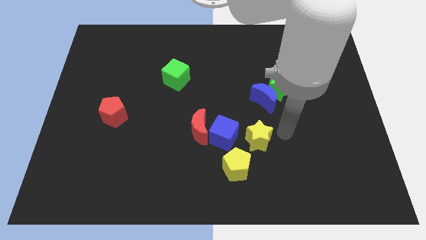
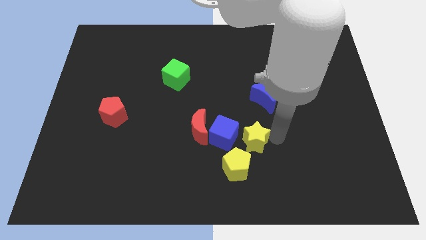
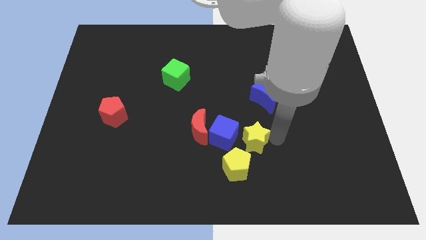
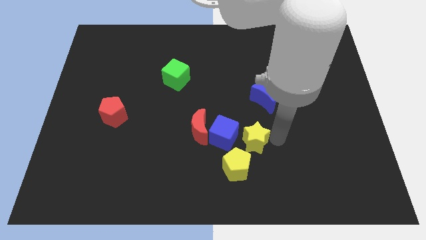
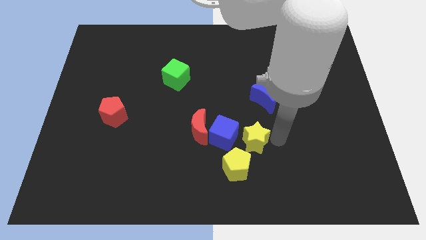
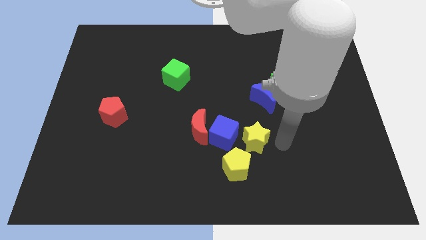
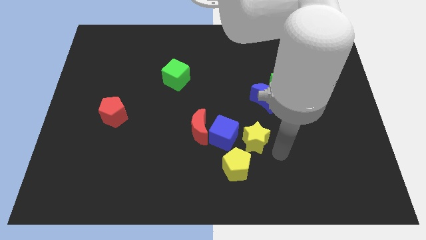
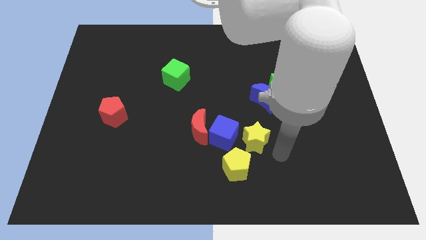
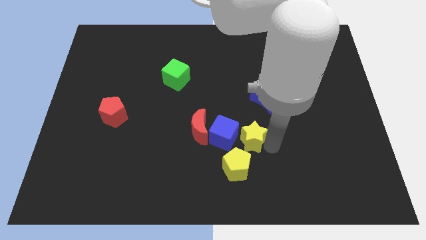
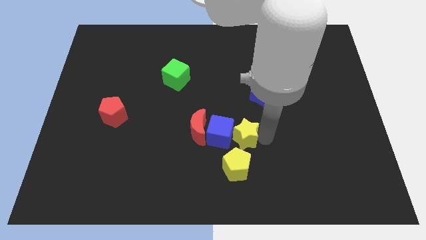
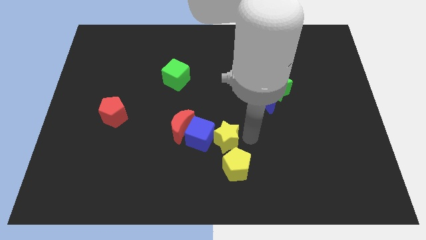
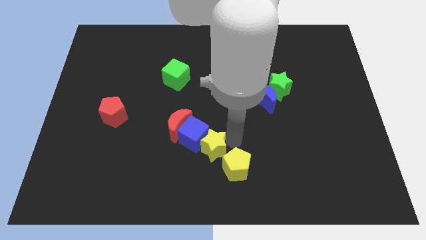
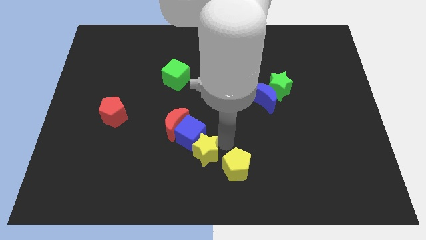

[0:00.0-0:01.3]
push yellow star into blue cube

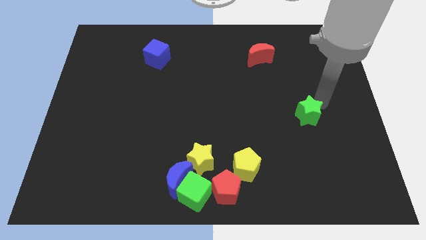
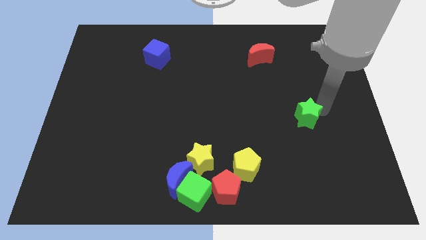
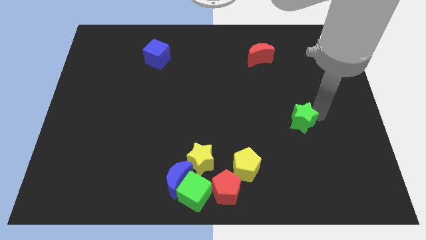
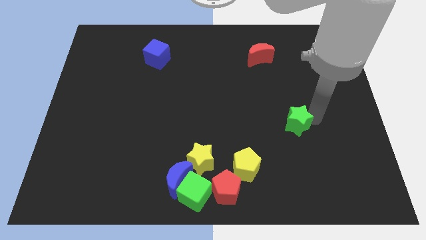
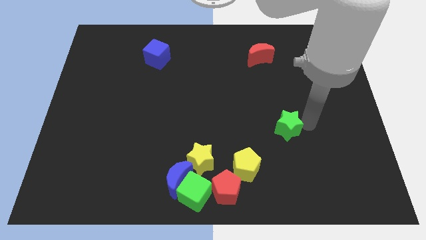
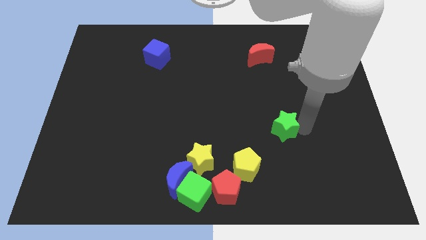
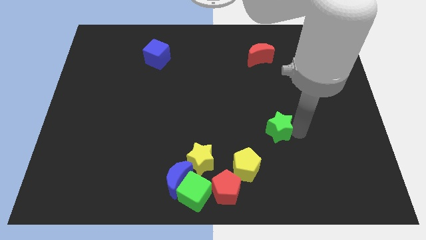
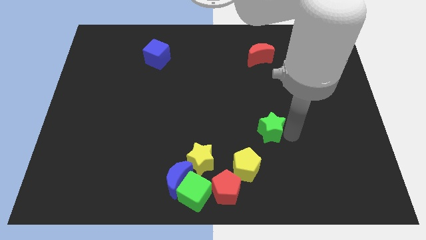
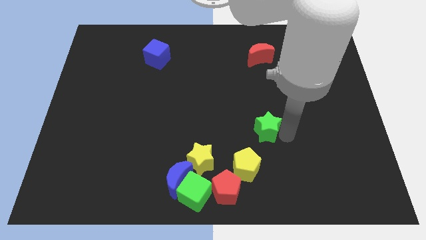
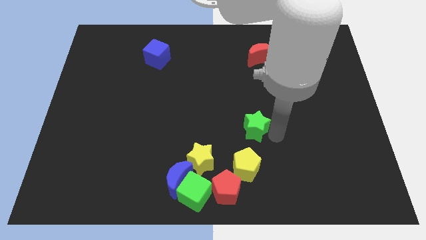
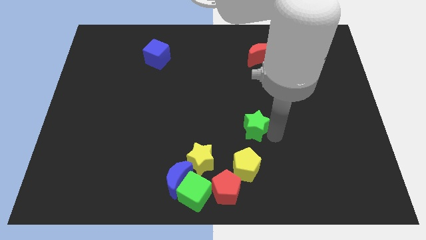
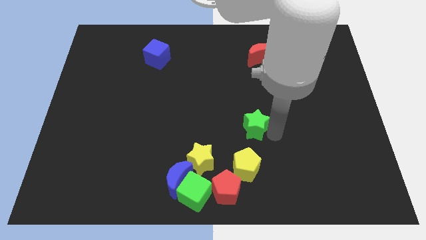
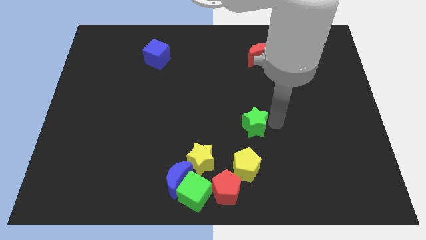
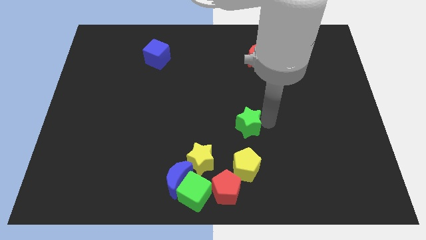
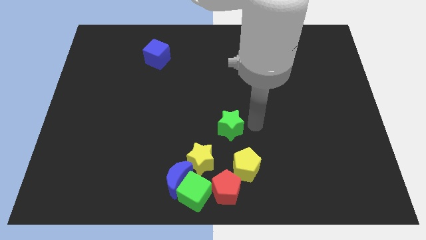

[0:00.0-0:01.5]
push the green star at the center top of the yellow star and yellow pentagon

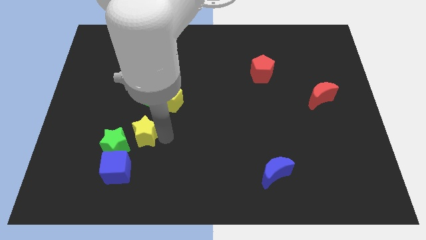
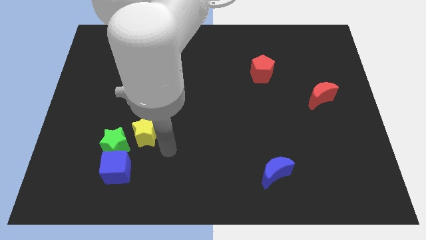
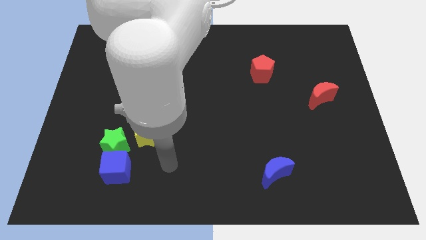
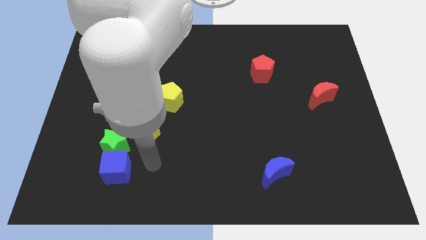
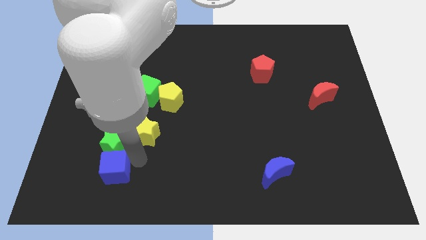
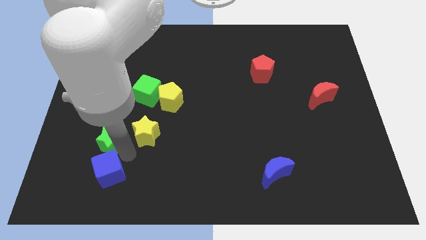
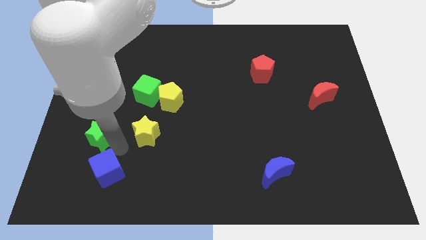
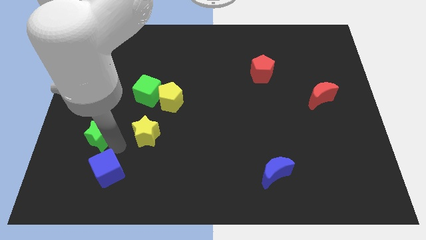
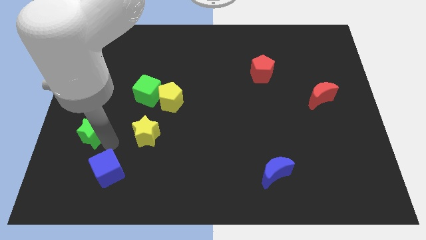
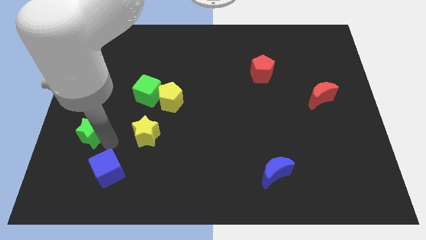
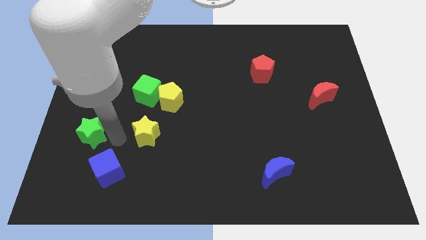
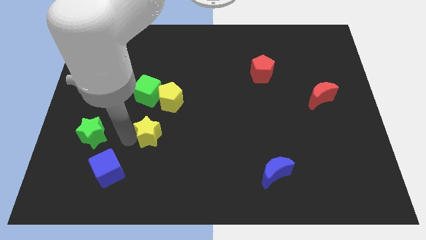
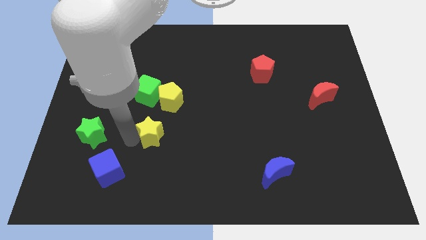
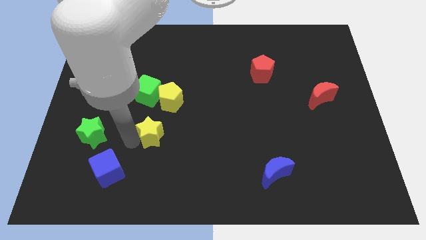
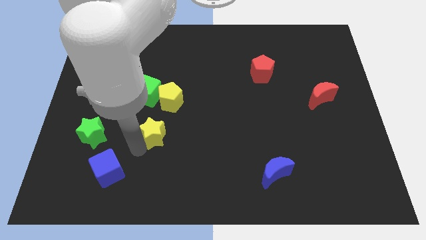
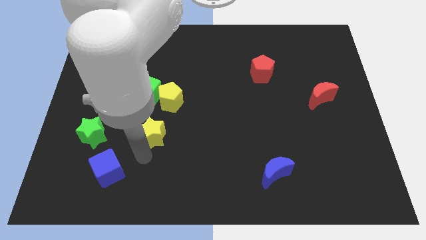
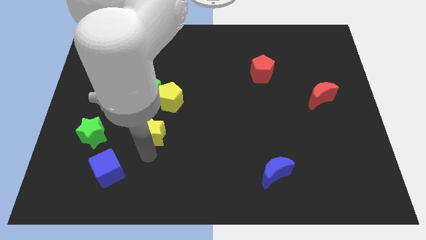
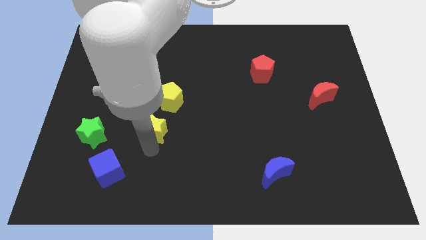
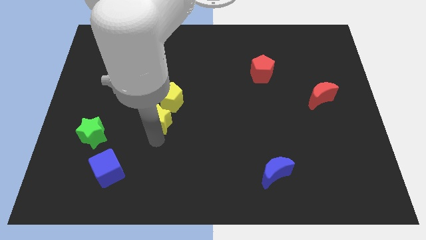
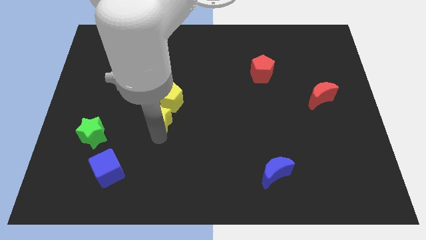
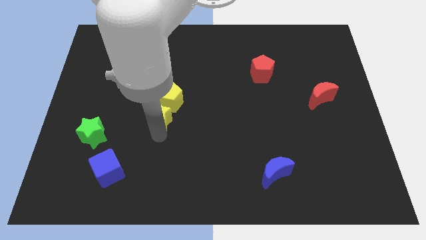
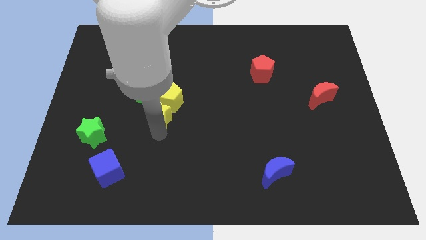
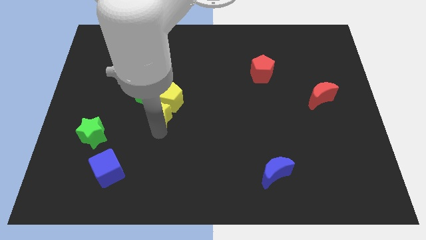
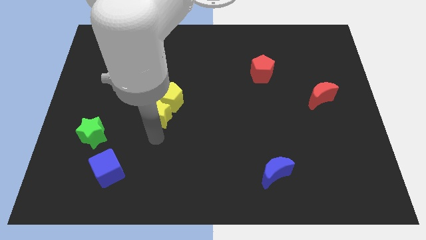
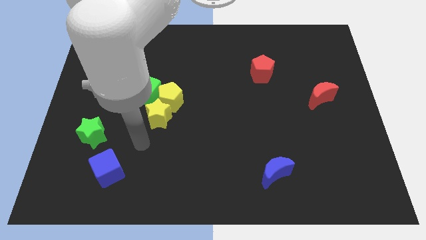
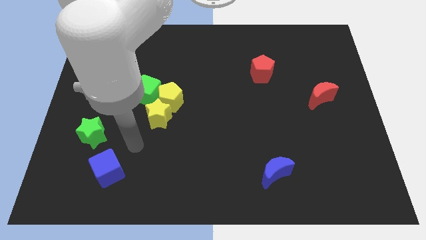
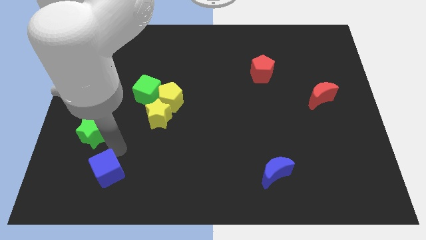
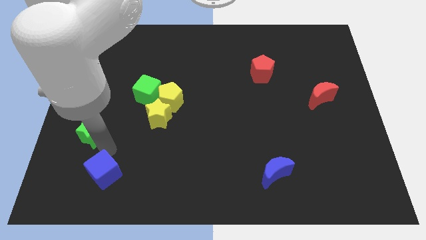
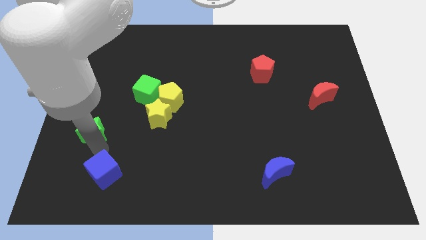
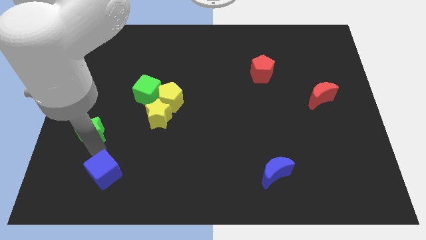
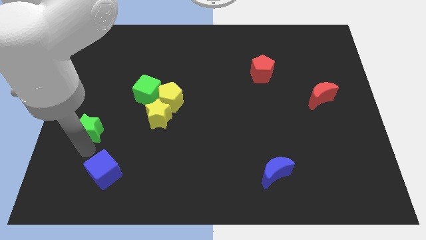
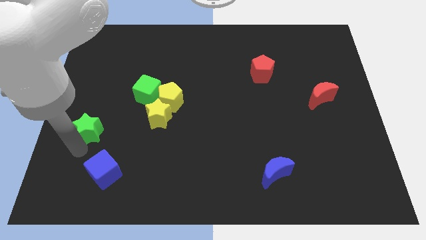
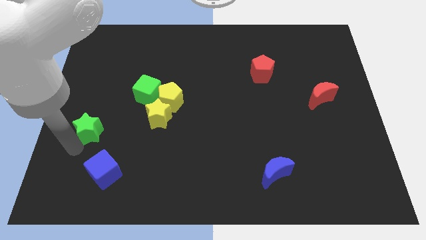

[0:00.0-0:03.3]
separate the yellow star from the green star

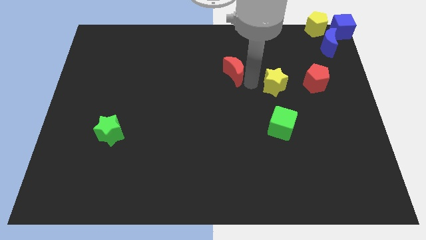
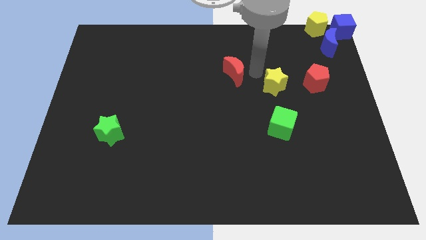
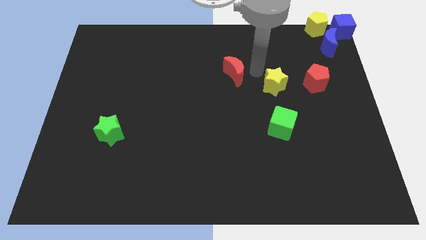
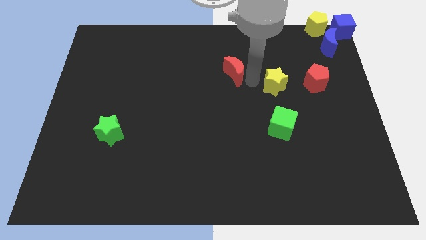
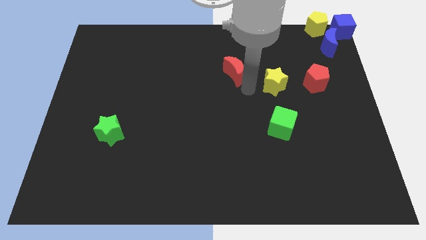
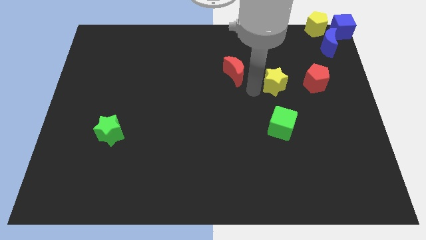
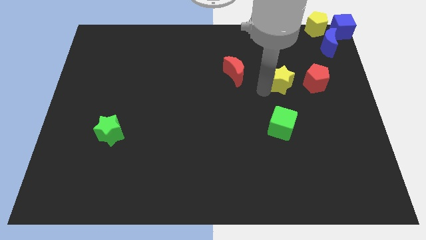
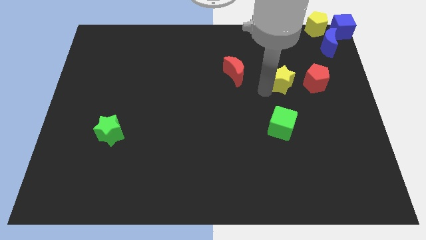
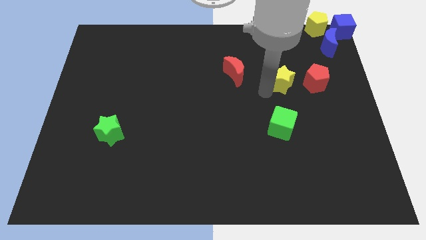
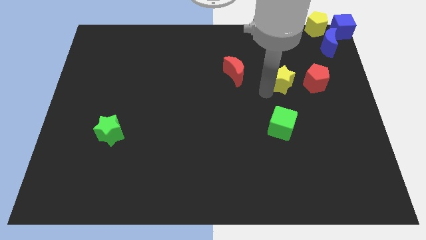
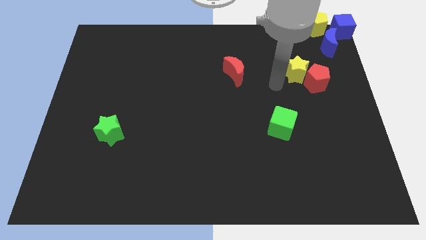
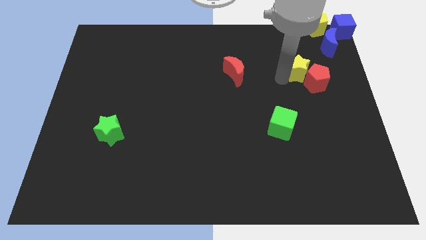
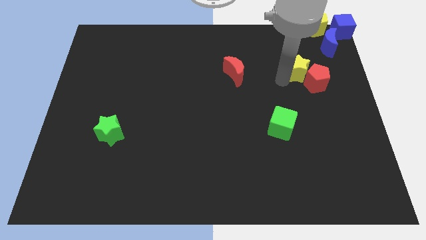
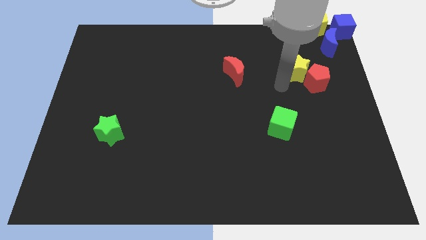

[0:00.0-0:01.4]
push the yellow star into the red pentagon

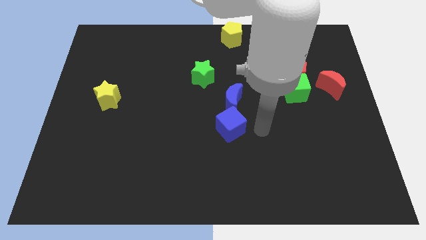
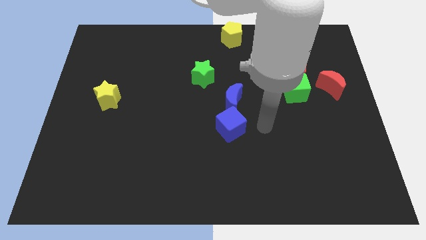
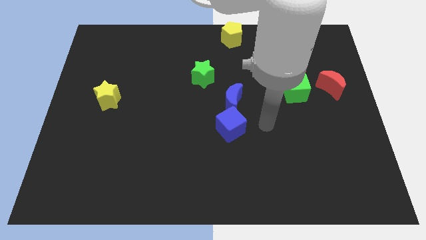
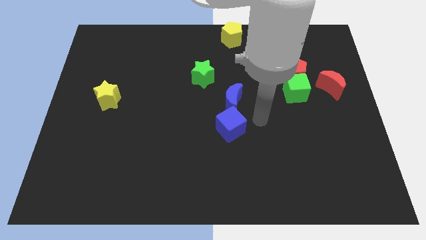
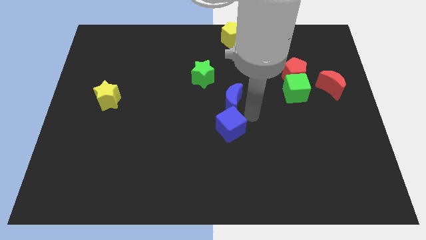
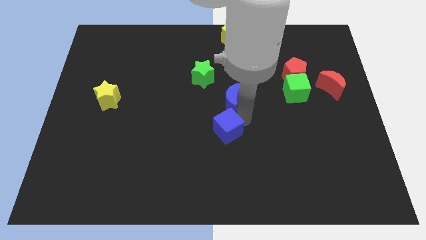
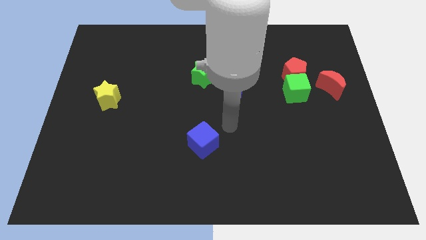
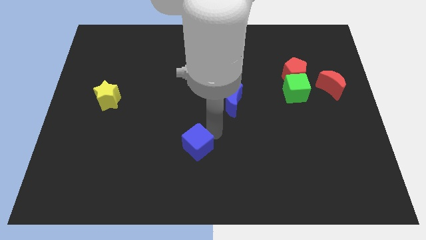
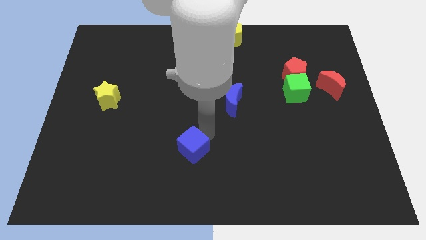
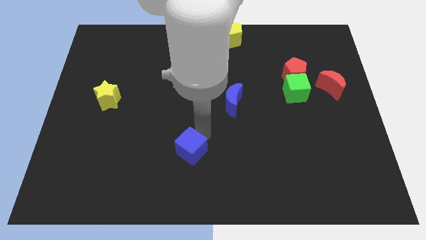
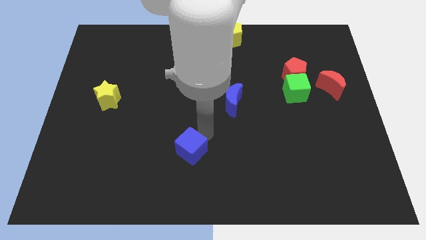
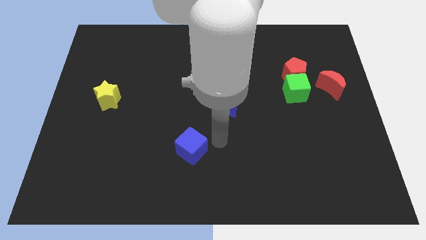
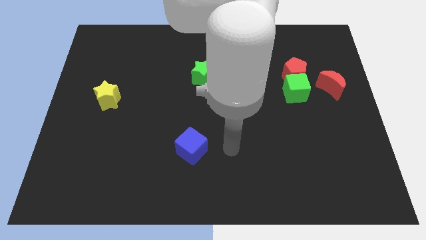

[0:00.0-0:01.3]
separate the blue cube from the blue moon
